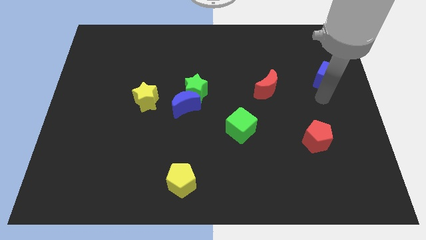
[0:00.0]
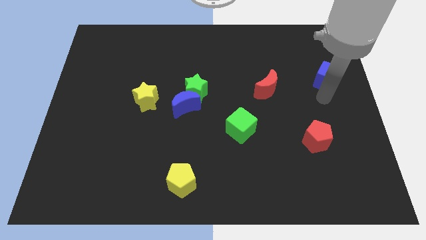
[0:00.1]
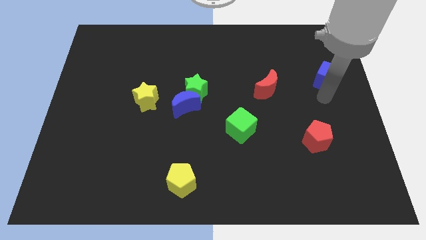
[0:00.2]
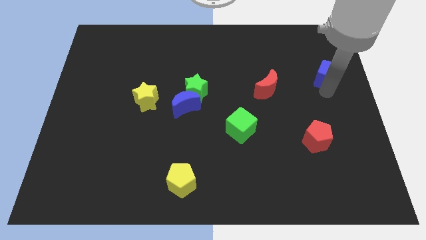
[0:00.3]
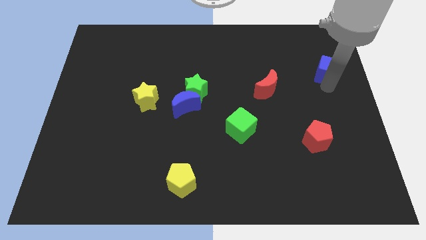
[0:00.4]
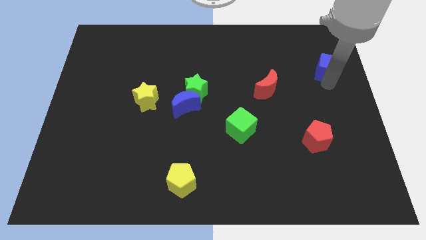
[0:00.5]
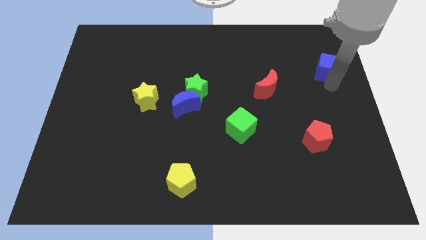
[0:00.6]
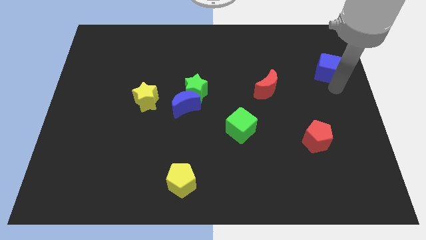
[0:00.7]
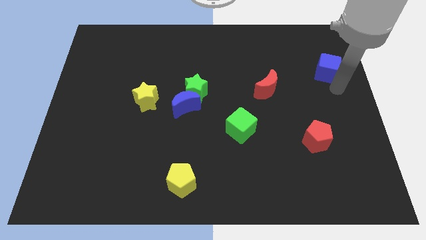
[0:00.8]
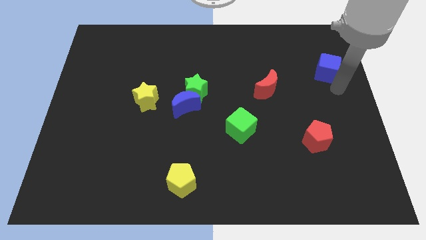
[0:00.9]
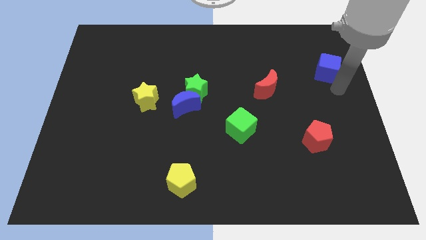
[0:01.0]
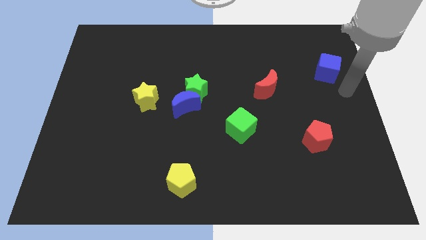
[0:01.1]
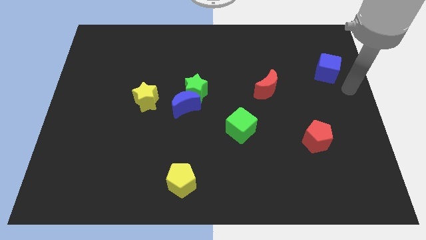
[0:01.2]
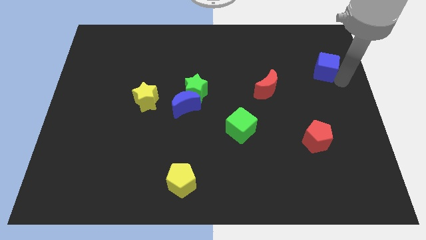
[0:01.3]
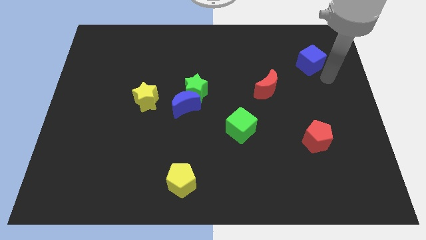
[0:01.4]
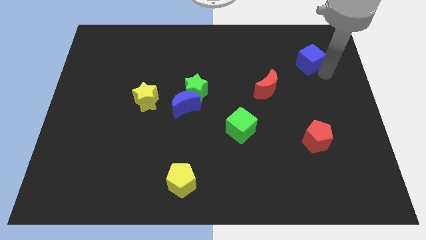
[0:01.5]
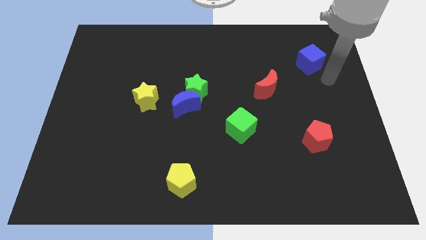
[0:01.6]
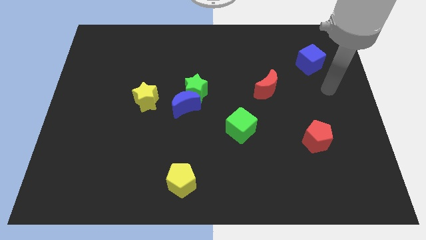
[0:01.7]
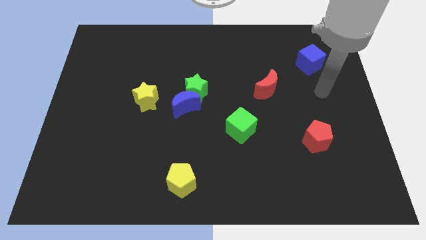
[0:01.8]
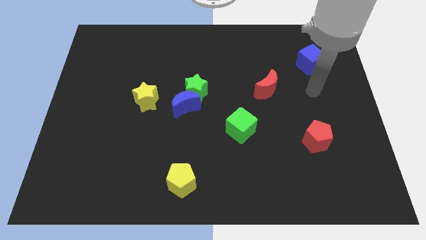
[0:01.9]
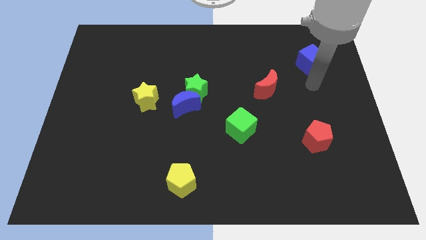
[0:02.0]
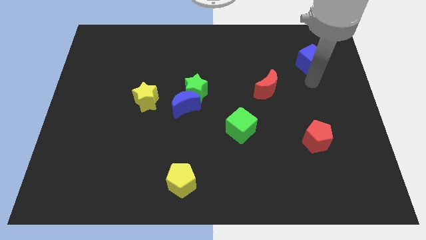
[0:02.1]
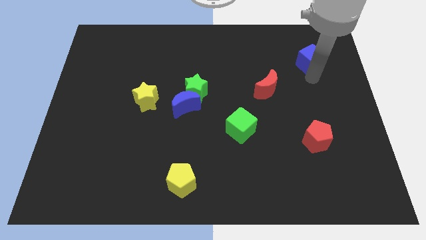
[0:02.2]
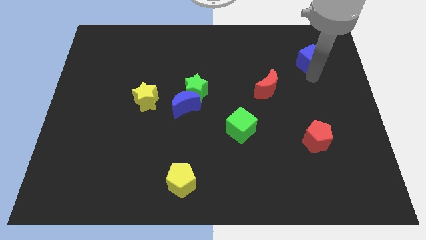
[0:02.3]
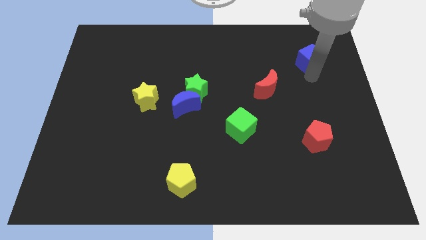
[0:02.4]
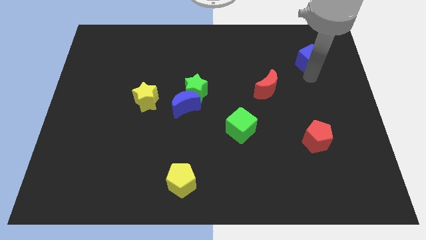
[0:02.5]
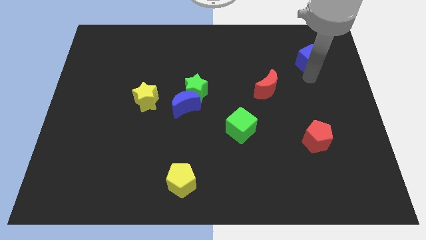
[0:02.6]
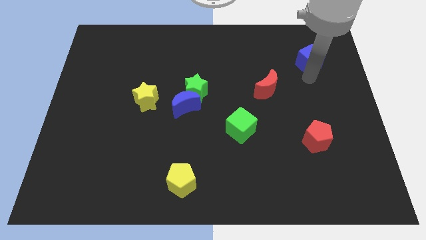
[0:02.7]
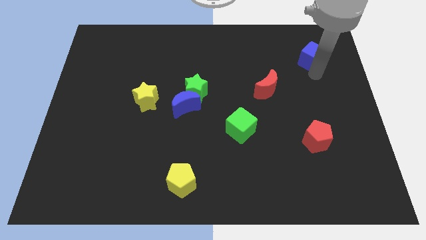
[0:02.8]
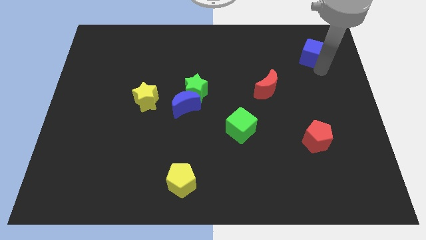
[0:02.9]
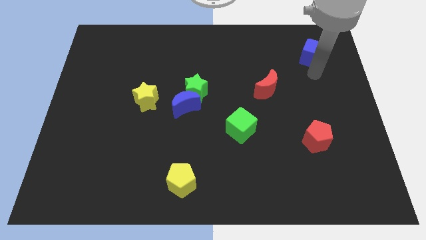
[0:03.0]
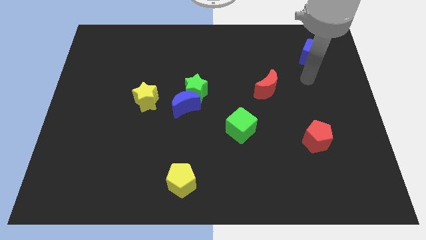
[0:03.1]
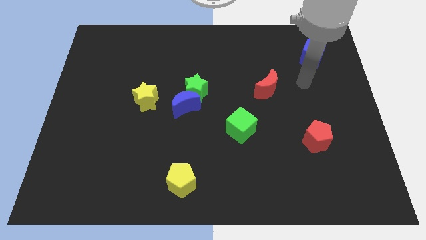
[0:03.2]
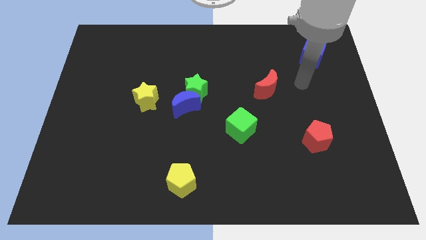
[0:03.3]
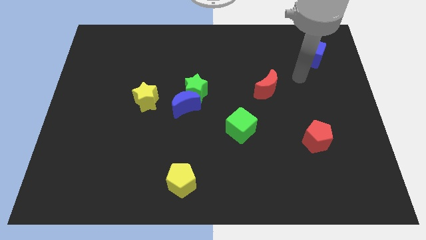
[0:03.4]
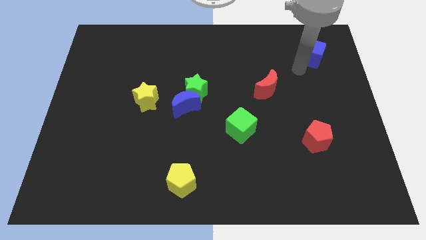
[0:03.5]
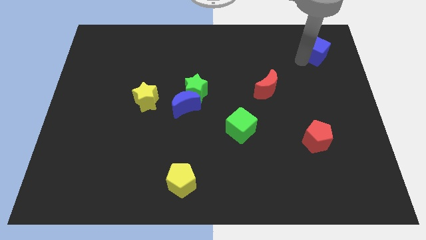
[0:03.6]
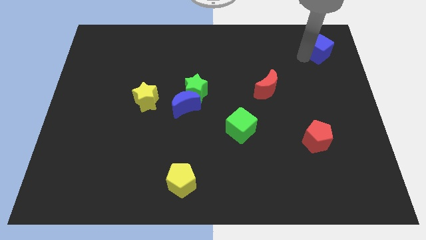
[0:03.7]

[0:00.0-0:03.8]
move the blue thing diagonal above the red crescent at the right

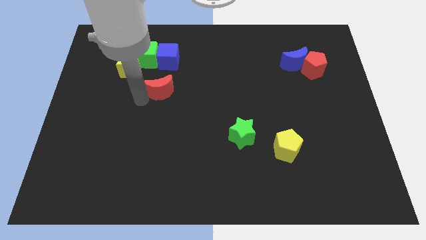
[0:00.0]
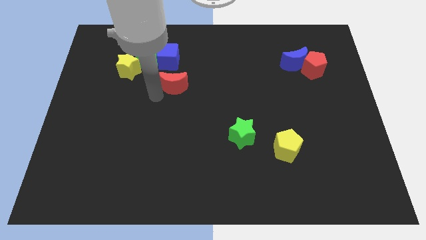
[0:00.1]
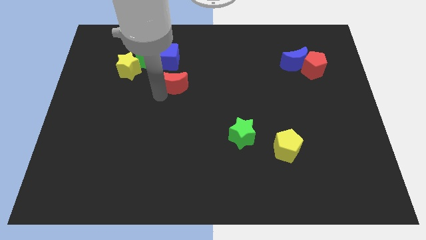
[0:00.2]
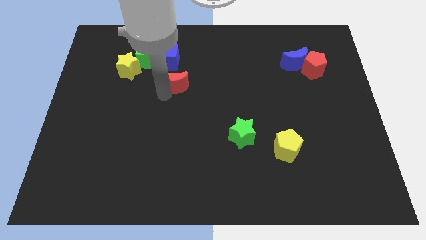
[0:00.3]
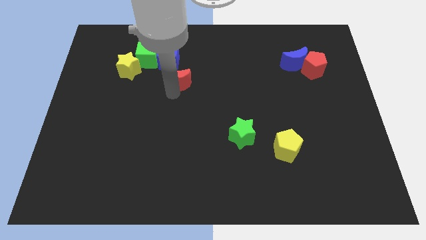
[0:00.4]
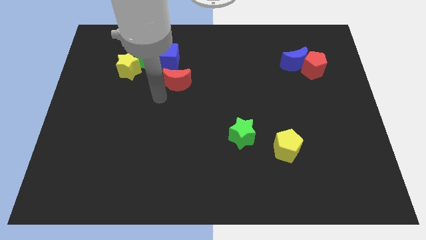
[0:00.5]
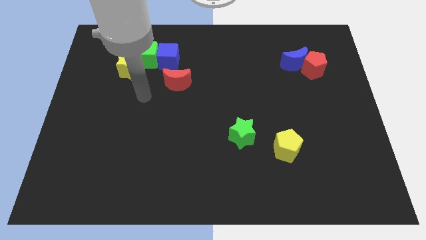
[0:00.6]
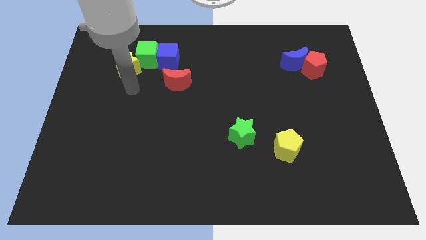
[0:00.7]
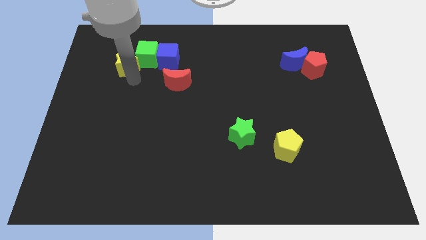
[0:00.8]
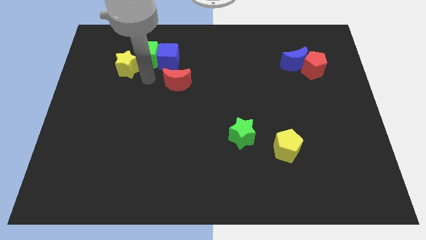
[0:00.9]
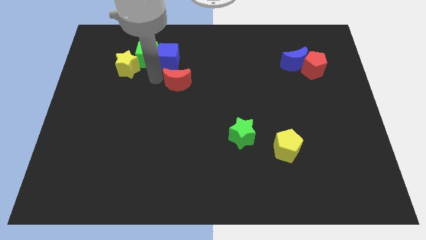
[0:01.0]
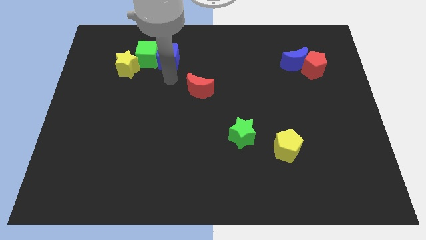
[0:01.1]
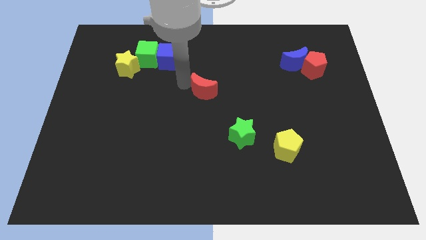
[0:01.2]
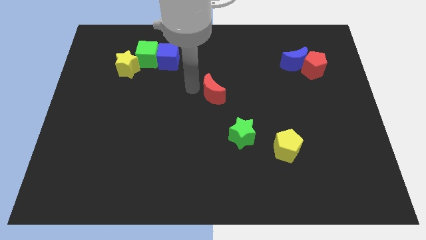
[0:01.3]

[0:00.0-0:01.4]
place the red crescent slightly to the center of the board

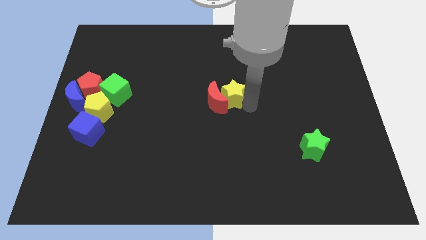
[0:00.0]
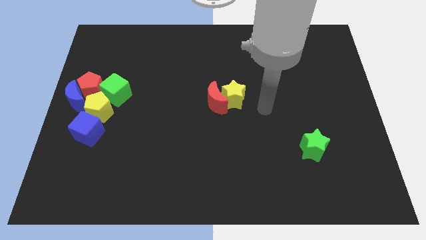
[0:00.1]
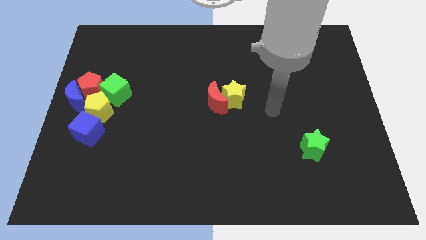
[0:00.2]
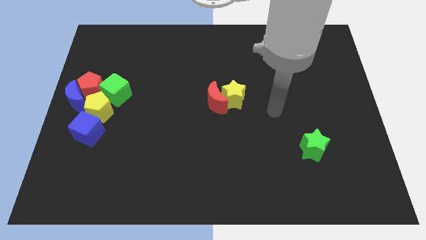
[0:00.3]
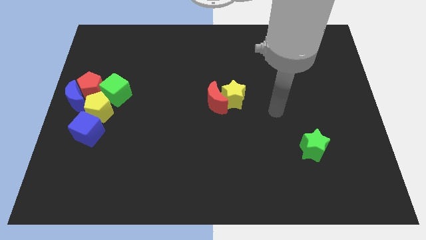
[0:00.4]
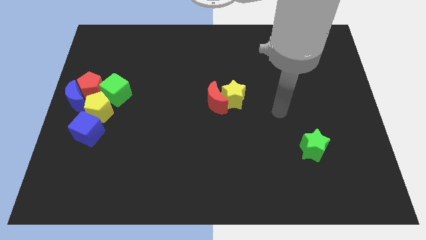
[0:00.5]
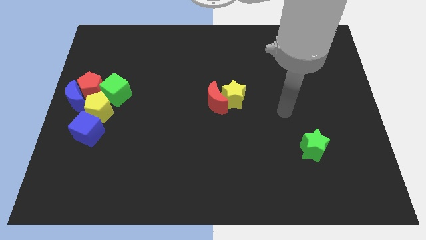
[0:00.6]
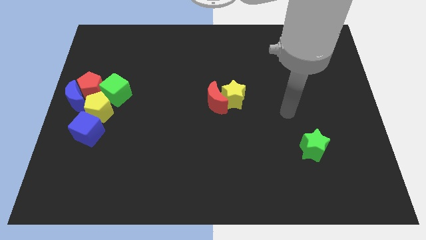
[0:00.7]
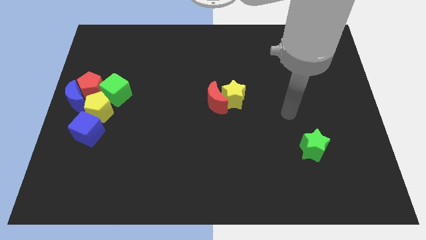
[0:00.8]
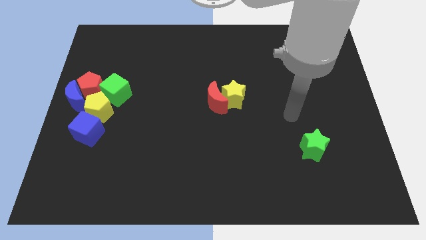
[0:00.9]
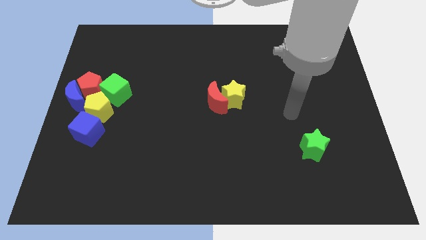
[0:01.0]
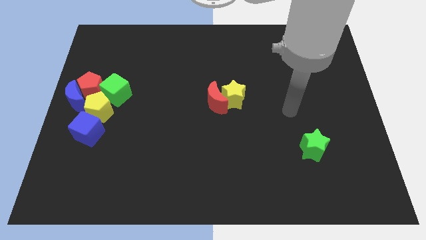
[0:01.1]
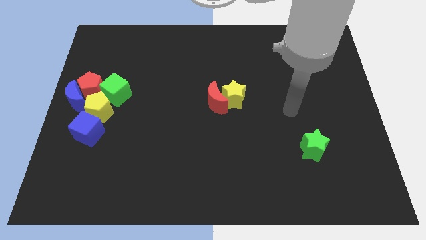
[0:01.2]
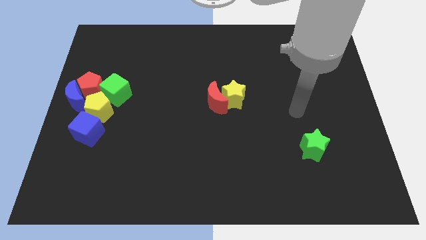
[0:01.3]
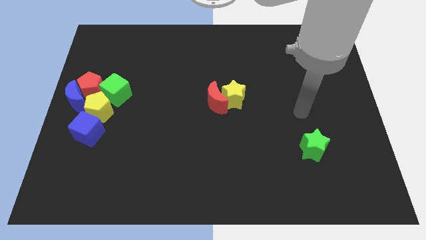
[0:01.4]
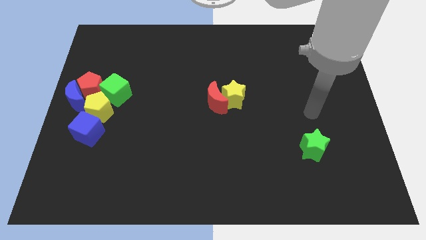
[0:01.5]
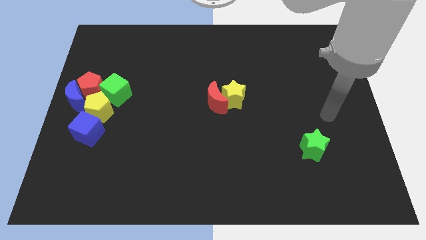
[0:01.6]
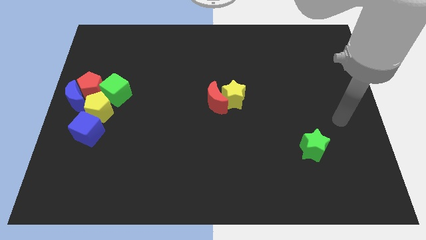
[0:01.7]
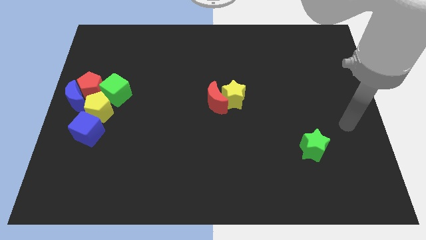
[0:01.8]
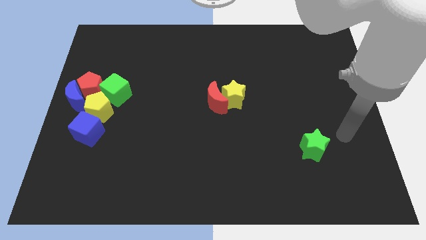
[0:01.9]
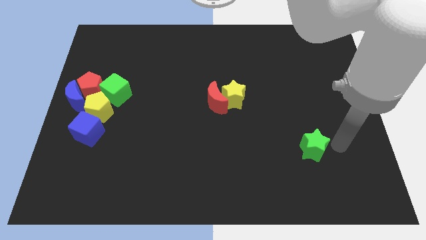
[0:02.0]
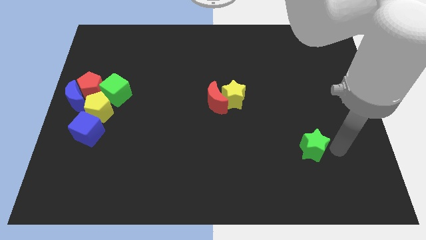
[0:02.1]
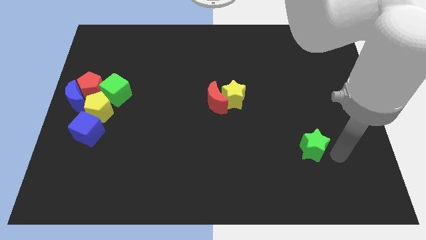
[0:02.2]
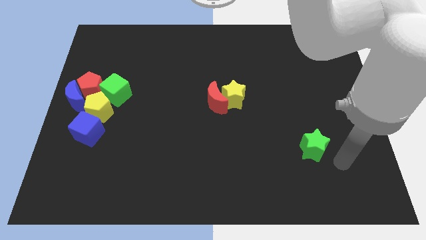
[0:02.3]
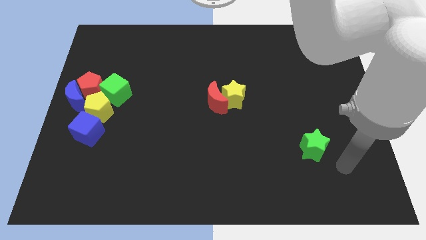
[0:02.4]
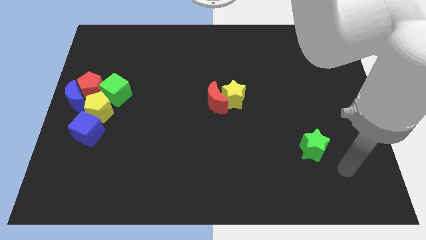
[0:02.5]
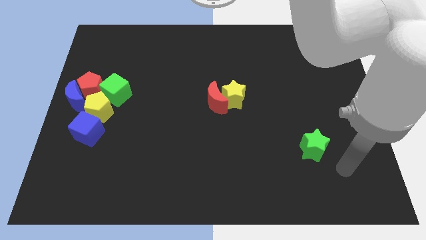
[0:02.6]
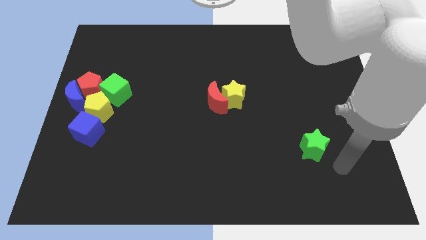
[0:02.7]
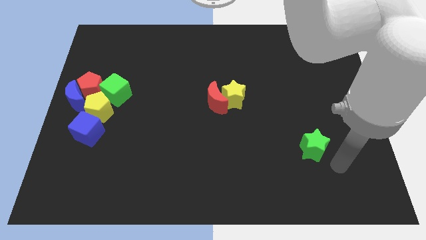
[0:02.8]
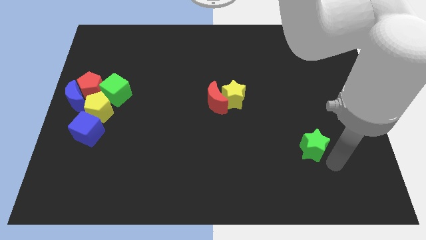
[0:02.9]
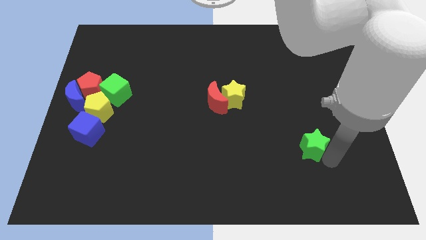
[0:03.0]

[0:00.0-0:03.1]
move your arm near the green star

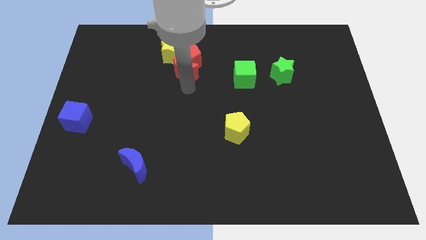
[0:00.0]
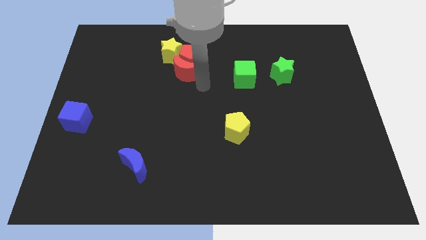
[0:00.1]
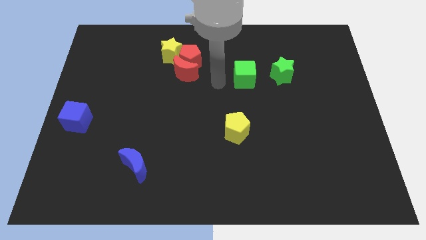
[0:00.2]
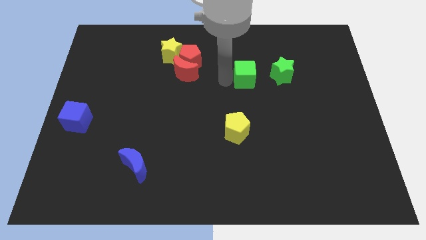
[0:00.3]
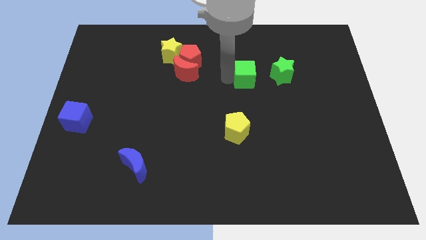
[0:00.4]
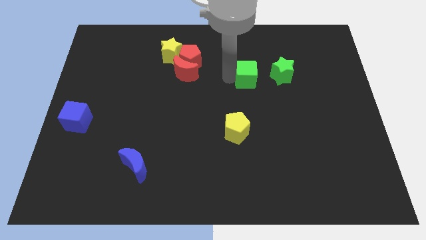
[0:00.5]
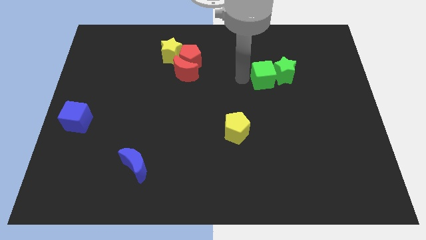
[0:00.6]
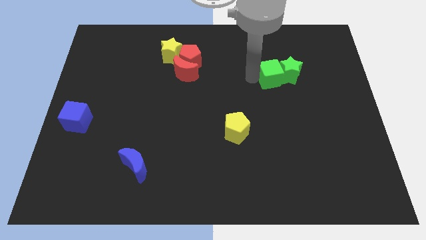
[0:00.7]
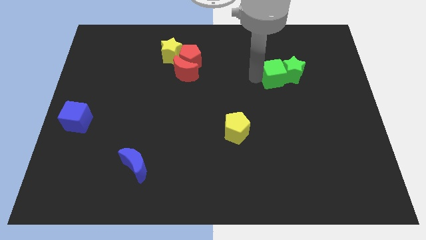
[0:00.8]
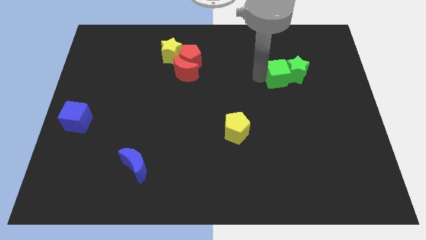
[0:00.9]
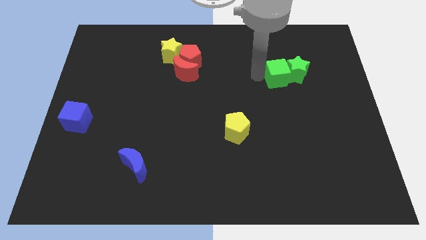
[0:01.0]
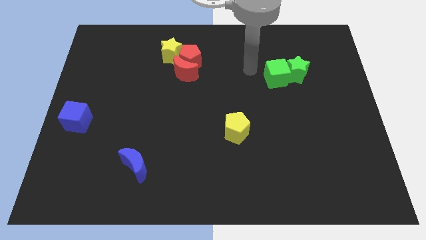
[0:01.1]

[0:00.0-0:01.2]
move the green cube and the green star to the top right of the yellow pentagon
